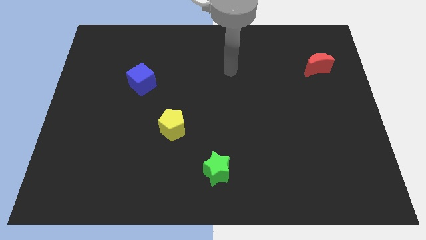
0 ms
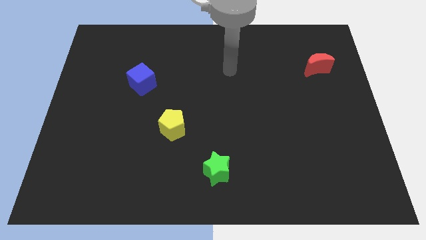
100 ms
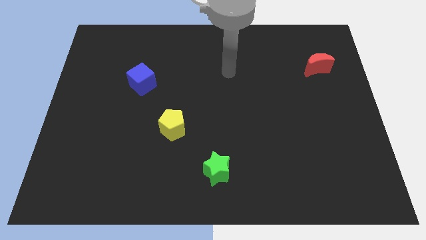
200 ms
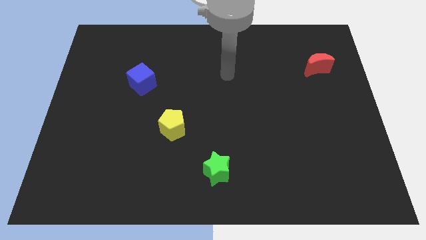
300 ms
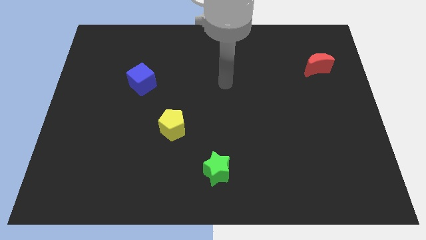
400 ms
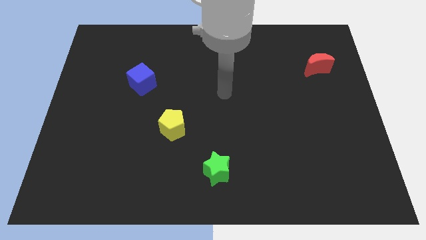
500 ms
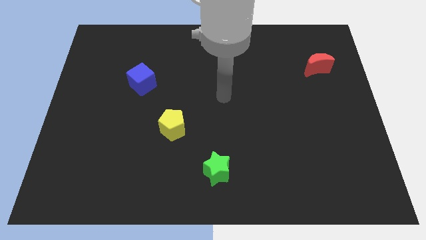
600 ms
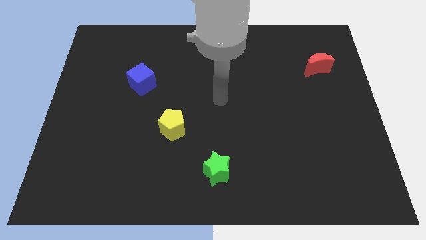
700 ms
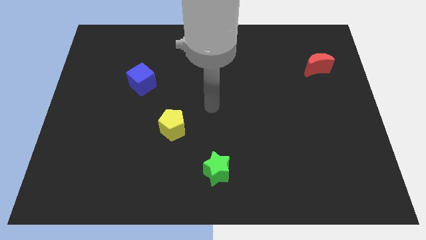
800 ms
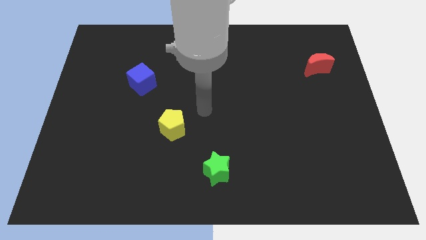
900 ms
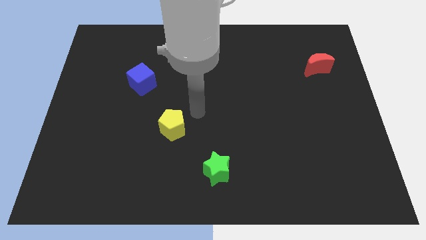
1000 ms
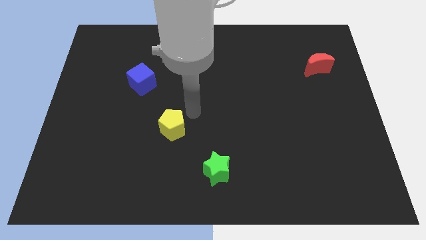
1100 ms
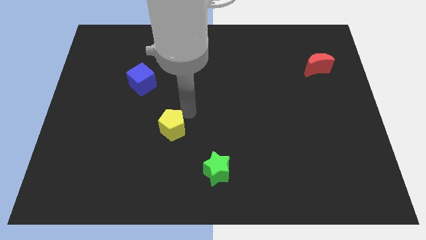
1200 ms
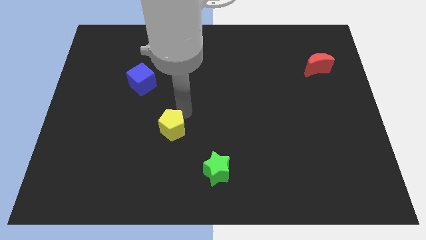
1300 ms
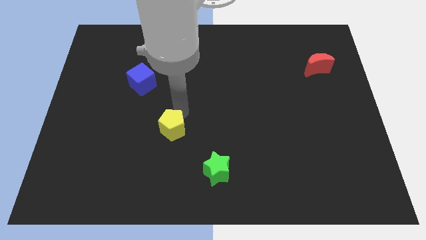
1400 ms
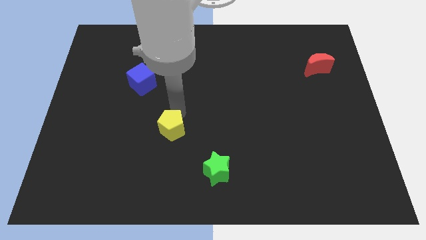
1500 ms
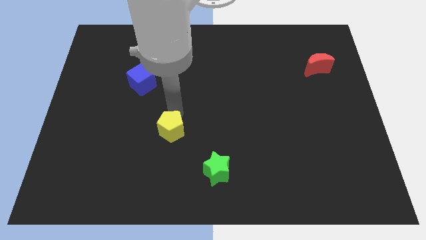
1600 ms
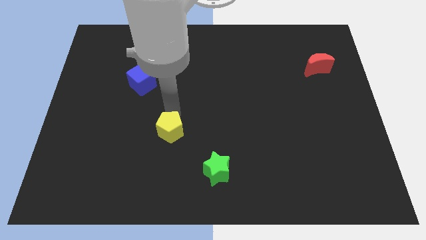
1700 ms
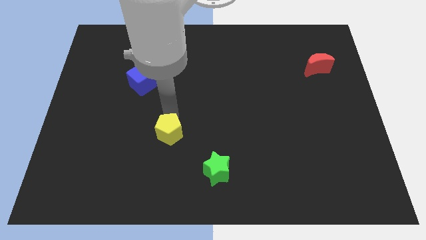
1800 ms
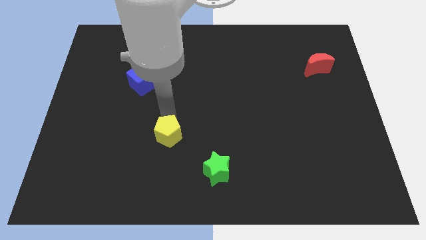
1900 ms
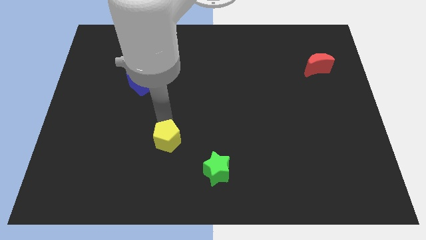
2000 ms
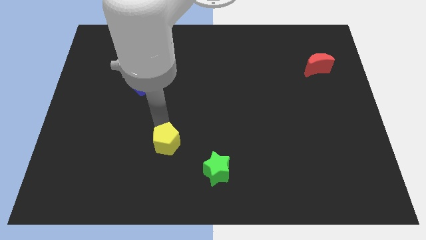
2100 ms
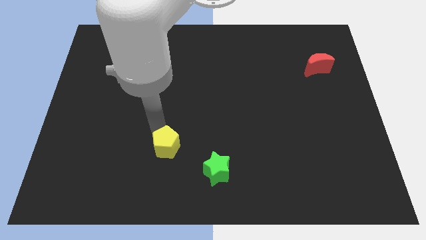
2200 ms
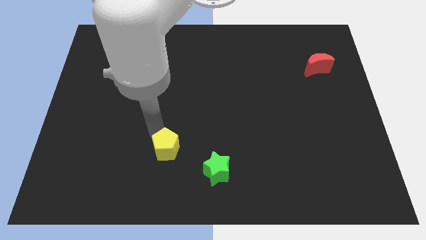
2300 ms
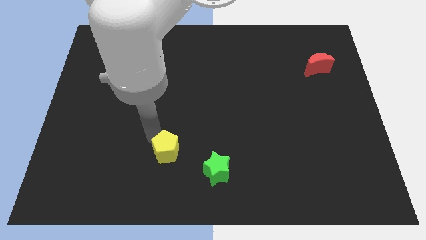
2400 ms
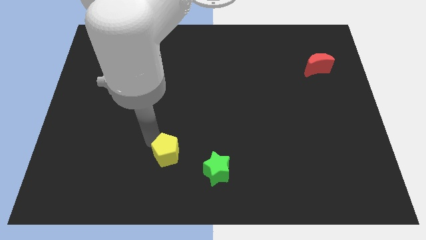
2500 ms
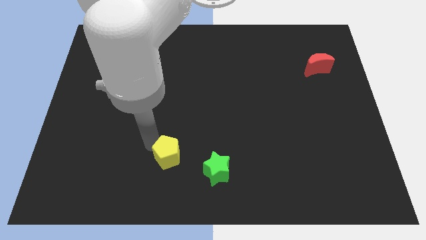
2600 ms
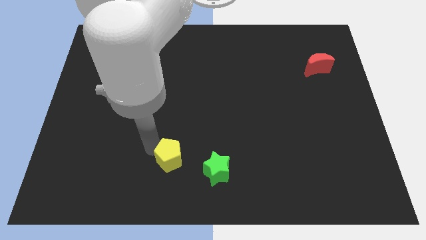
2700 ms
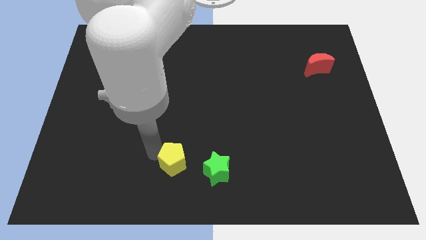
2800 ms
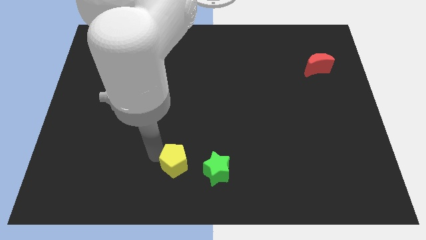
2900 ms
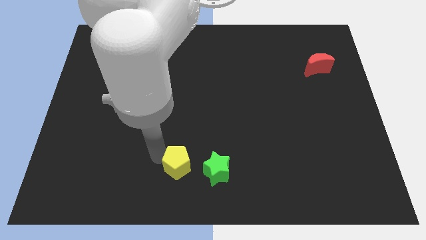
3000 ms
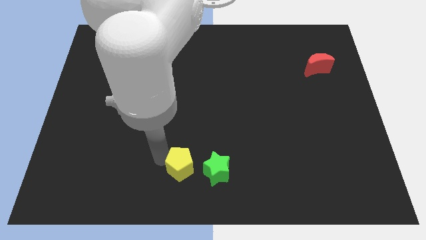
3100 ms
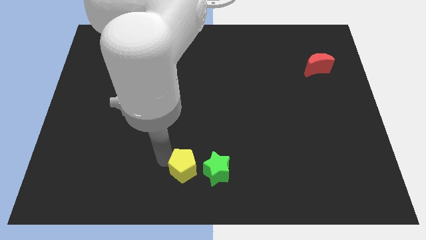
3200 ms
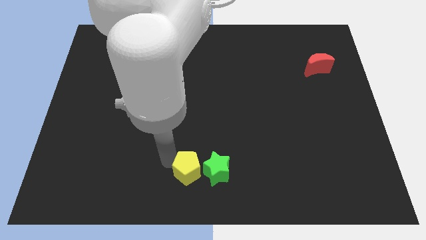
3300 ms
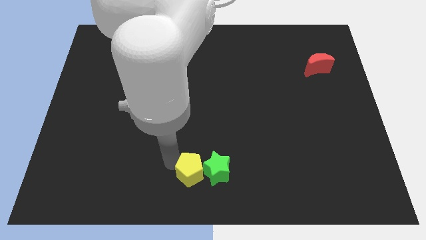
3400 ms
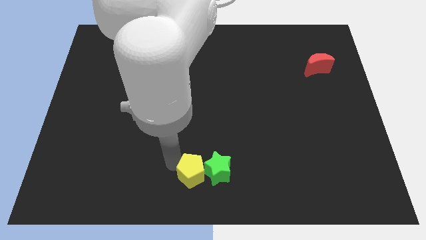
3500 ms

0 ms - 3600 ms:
push the yellow pentagon close to the green star

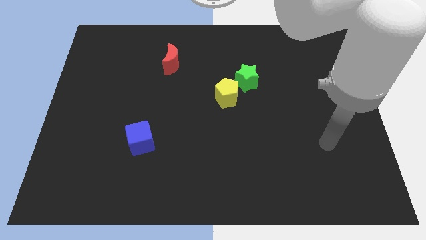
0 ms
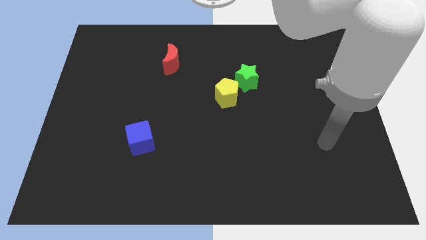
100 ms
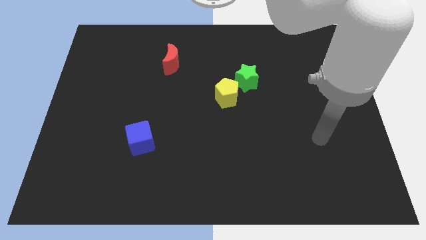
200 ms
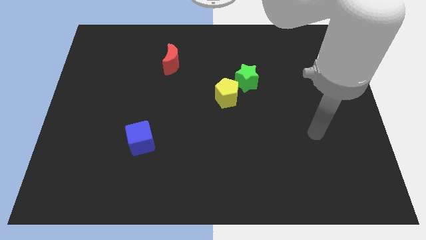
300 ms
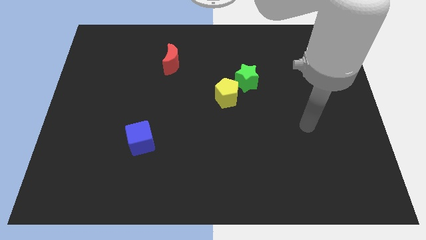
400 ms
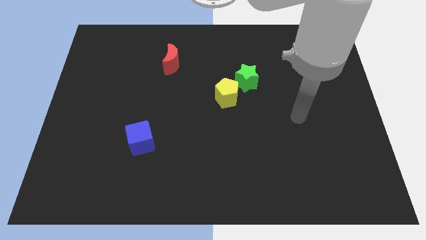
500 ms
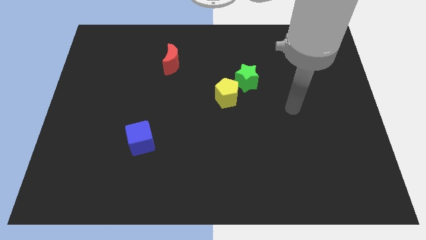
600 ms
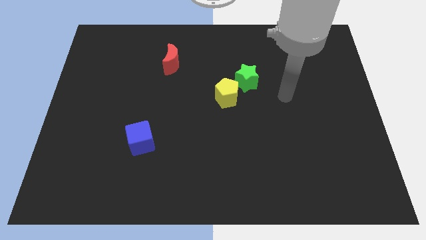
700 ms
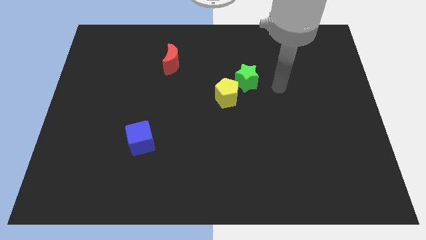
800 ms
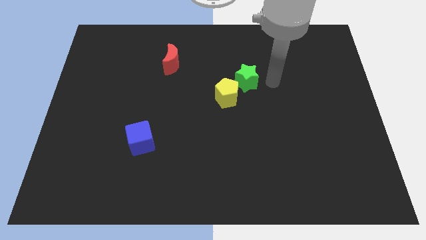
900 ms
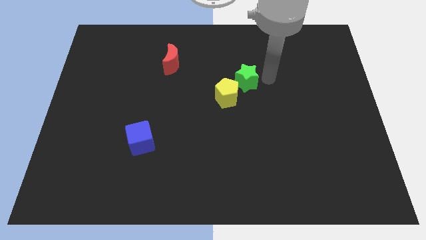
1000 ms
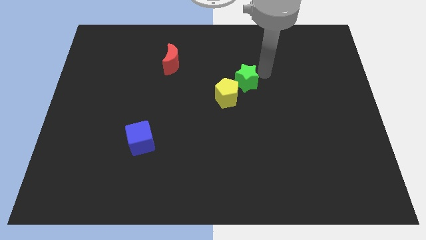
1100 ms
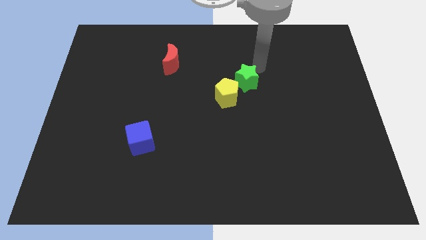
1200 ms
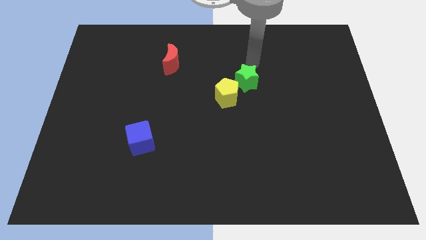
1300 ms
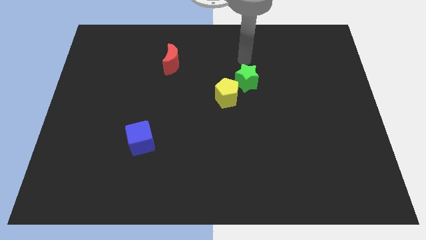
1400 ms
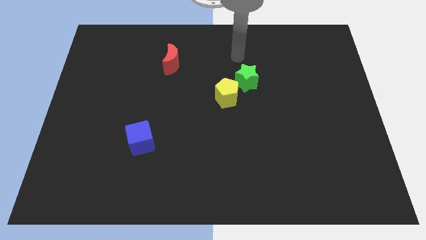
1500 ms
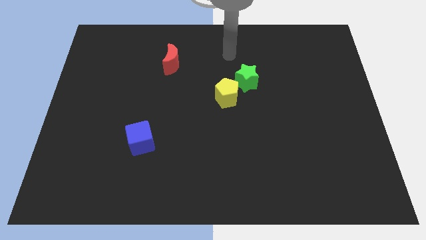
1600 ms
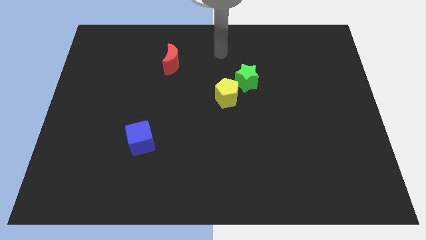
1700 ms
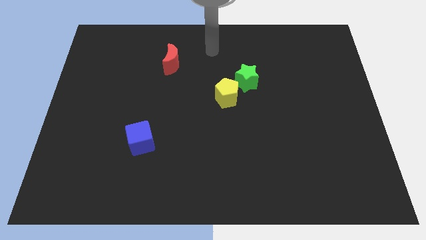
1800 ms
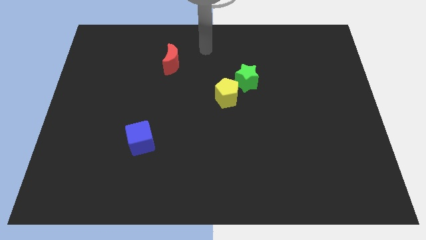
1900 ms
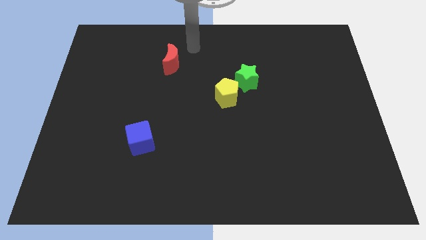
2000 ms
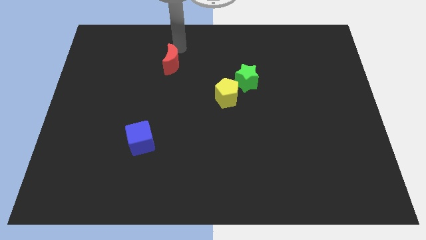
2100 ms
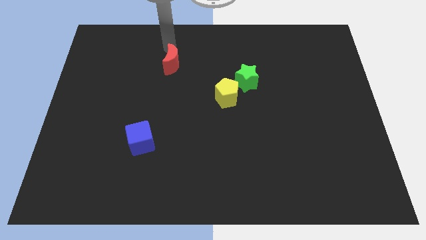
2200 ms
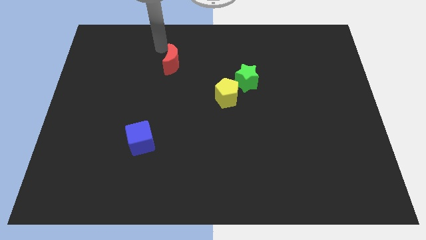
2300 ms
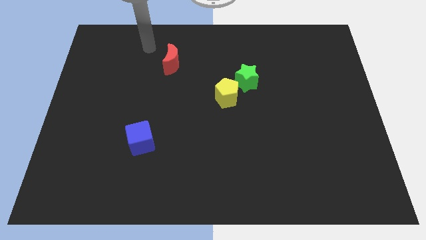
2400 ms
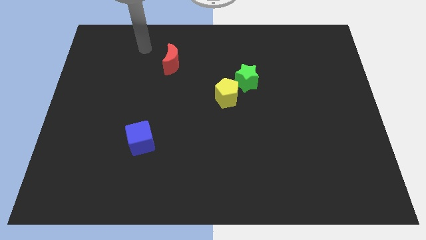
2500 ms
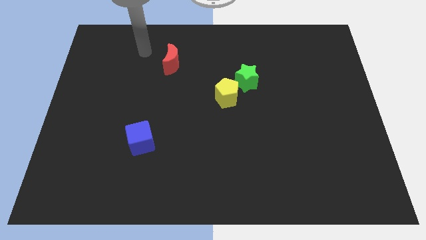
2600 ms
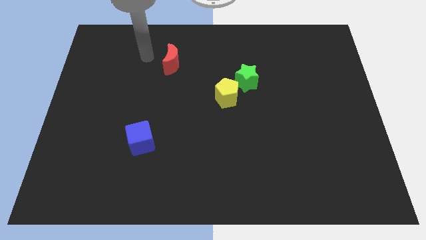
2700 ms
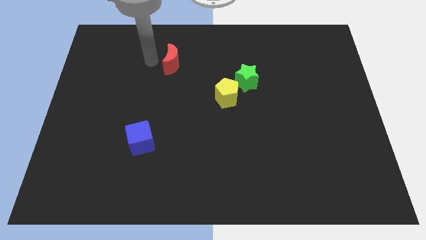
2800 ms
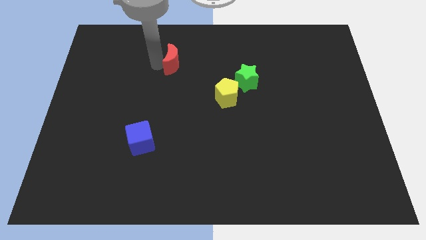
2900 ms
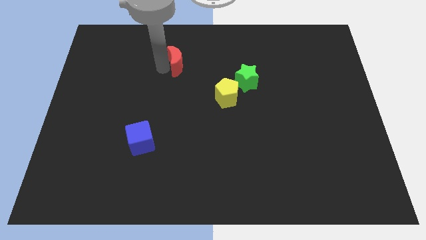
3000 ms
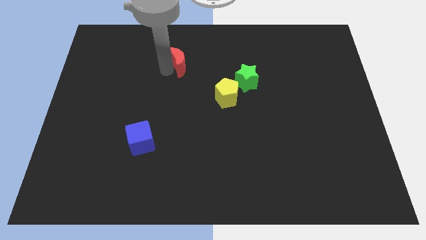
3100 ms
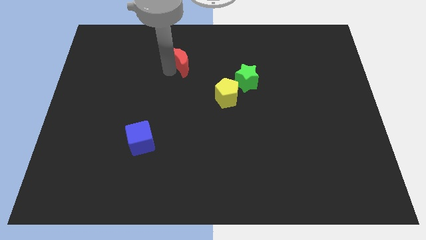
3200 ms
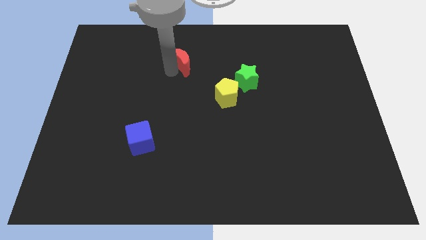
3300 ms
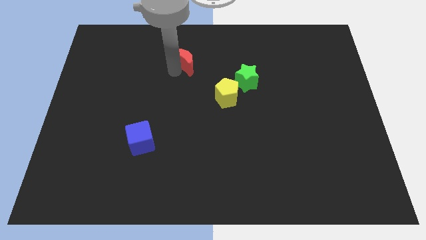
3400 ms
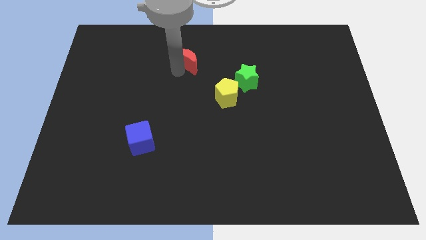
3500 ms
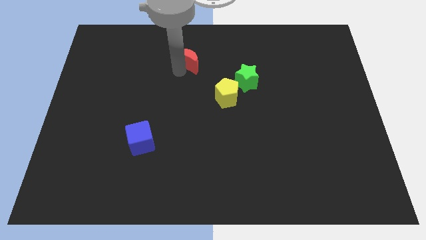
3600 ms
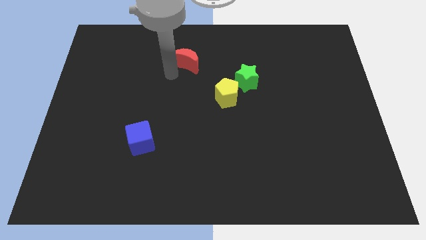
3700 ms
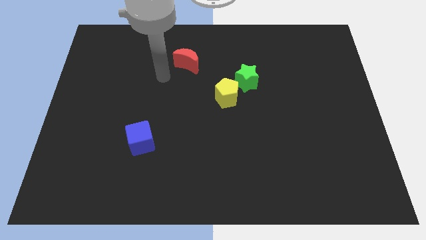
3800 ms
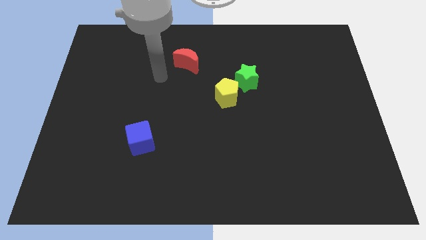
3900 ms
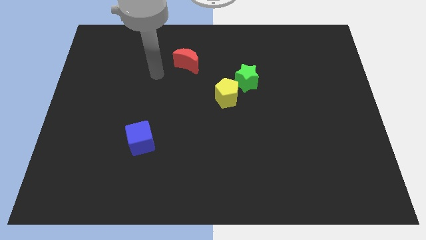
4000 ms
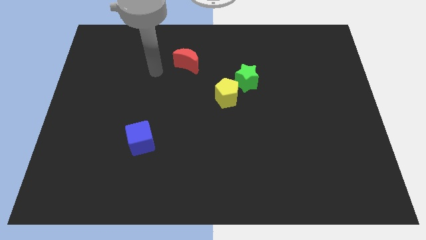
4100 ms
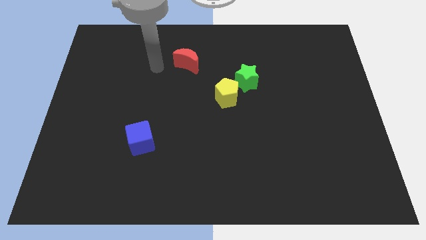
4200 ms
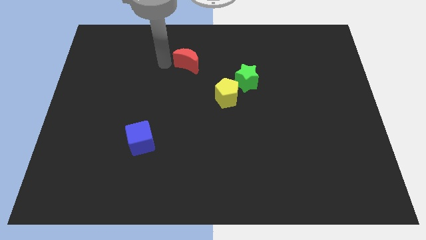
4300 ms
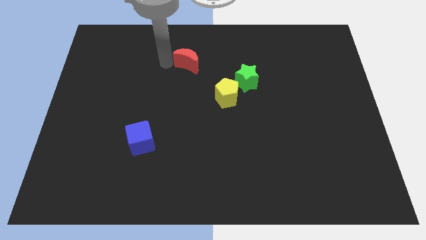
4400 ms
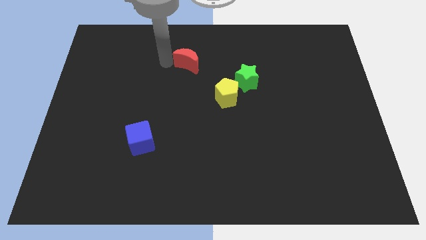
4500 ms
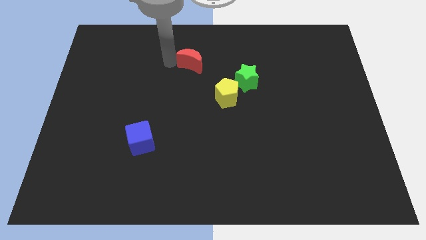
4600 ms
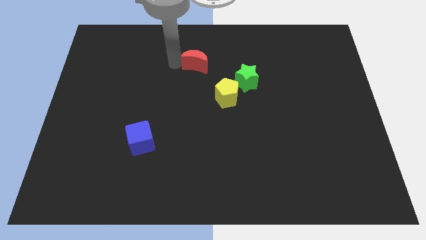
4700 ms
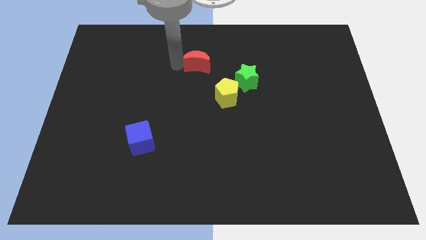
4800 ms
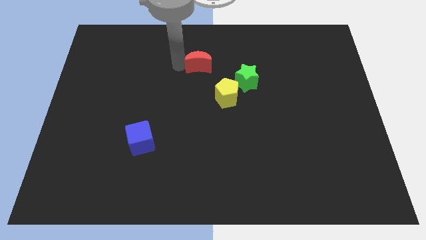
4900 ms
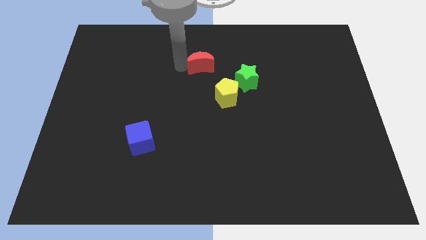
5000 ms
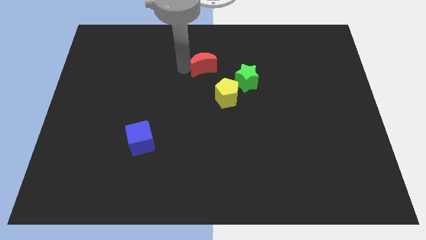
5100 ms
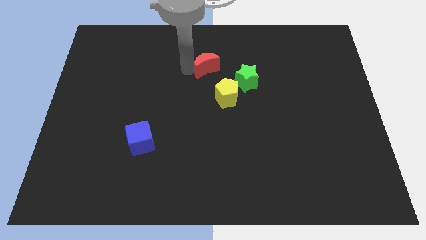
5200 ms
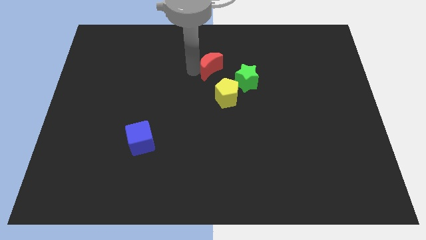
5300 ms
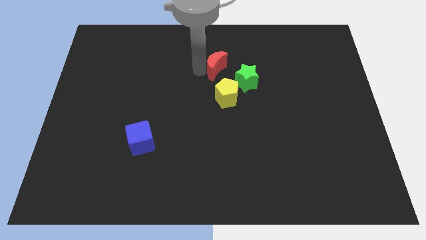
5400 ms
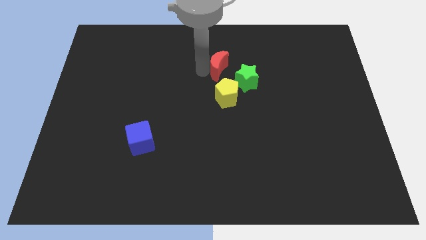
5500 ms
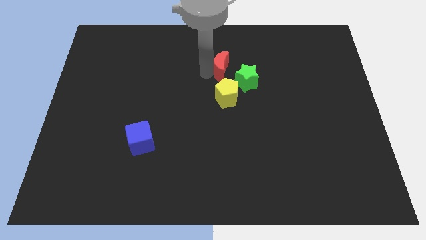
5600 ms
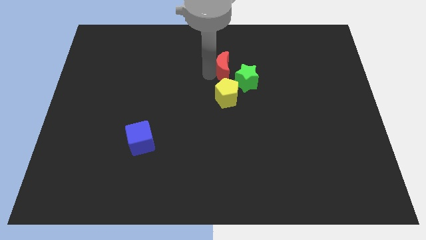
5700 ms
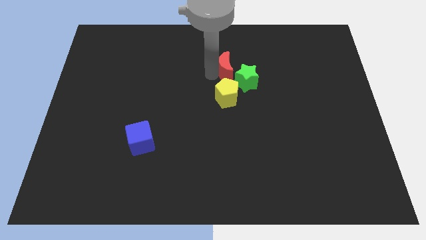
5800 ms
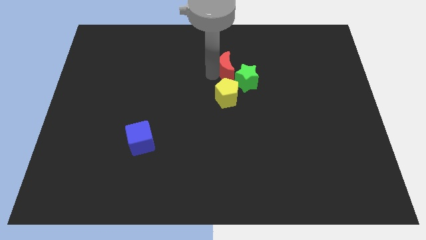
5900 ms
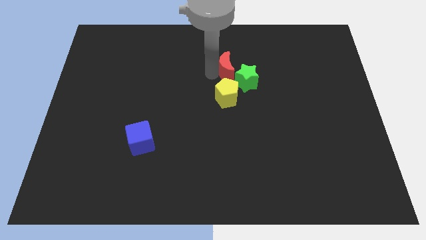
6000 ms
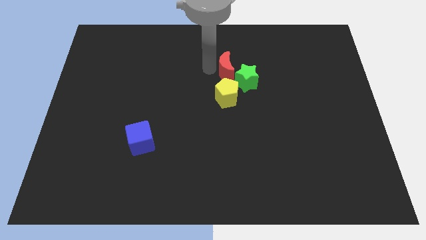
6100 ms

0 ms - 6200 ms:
slide the red moon towards the star
